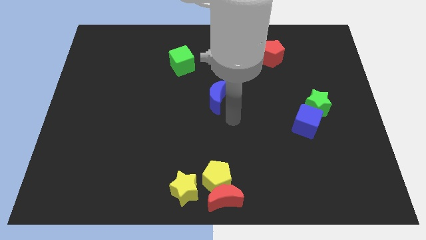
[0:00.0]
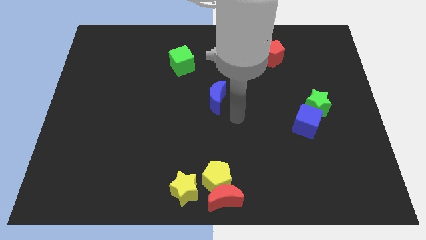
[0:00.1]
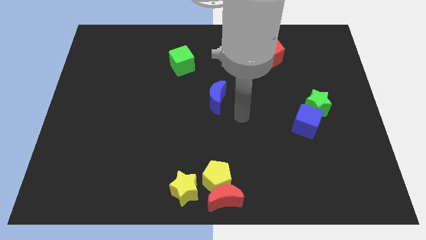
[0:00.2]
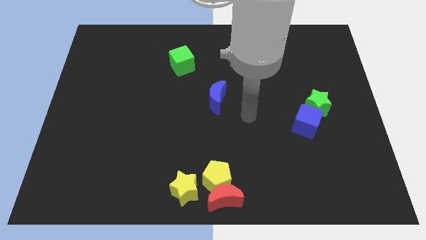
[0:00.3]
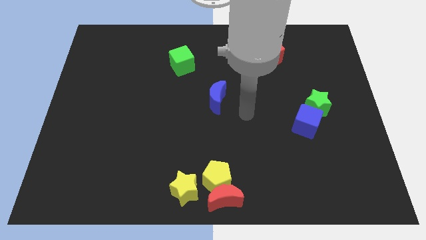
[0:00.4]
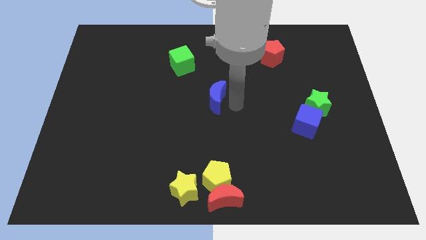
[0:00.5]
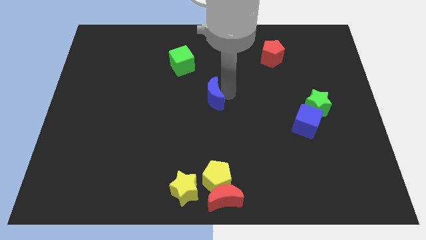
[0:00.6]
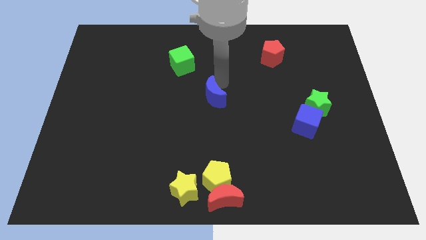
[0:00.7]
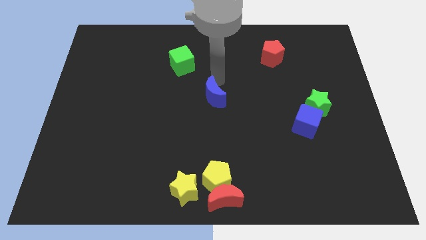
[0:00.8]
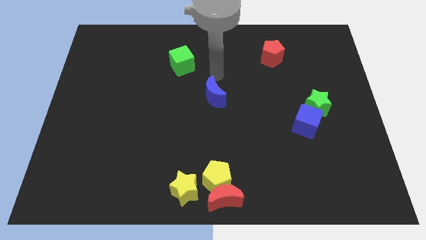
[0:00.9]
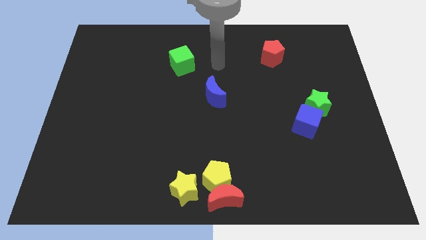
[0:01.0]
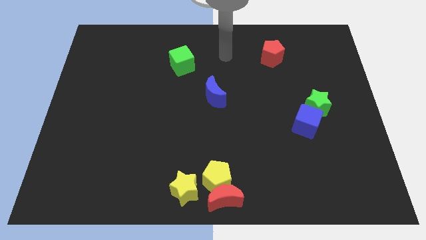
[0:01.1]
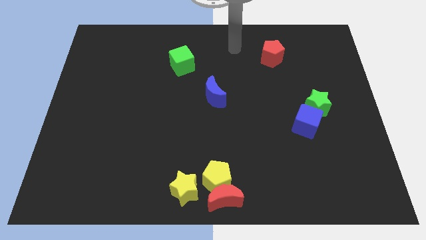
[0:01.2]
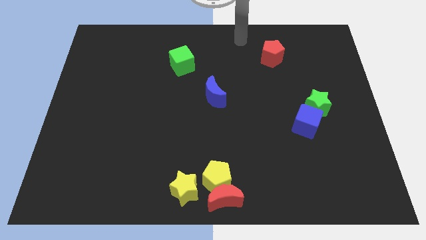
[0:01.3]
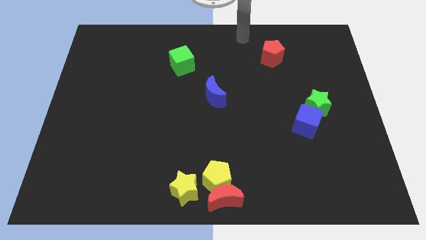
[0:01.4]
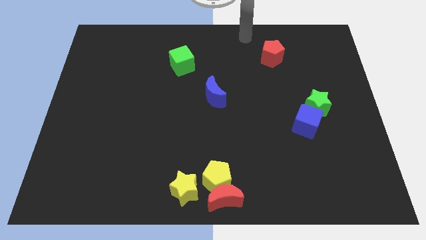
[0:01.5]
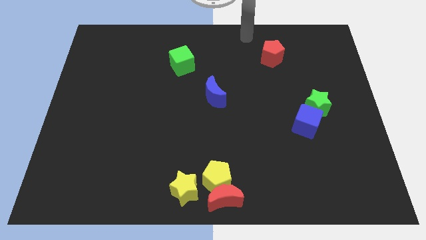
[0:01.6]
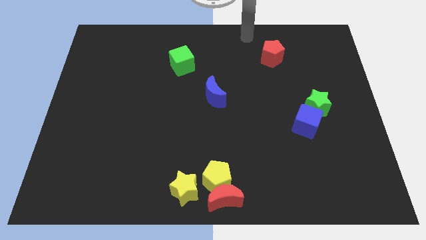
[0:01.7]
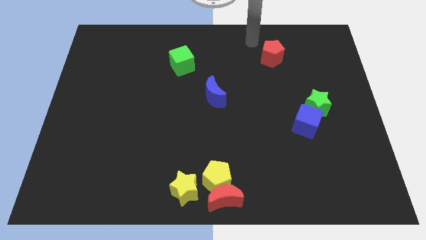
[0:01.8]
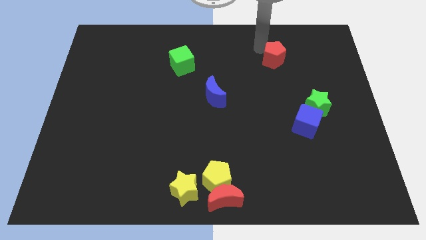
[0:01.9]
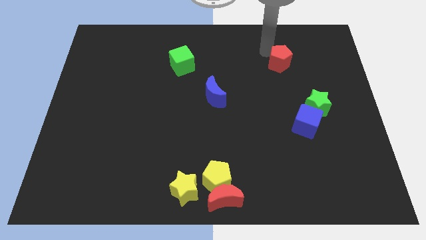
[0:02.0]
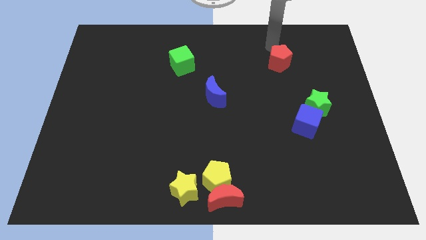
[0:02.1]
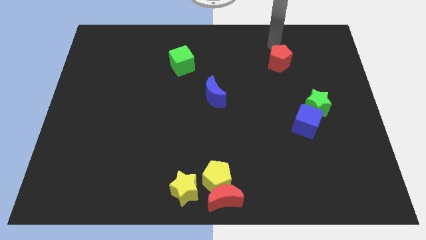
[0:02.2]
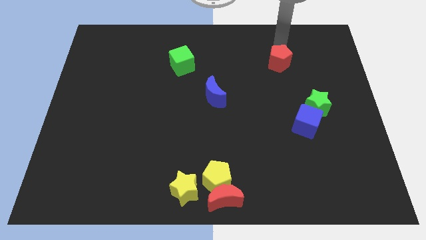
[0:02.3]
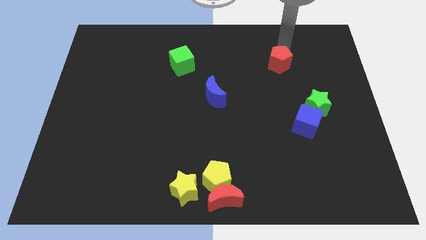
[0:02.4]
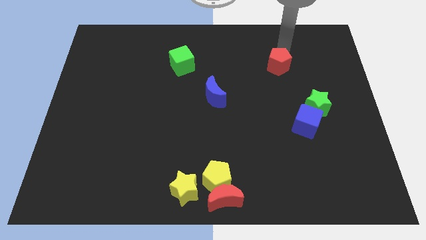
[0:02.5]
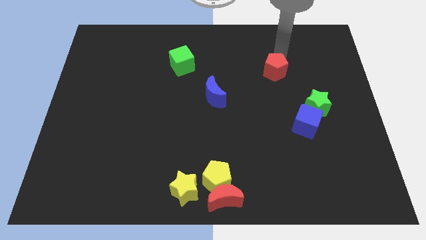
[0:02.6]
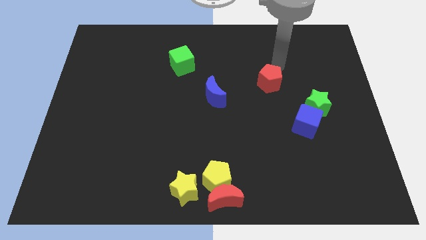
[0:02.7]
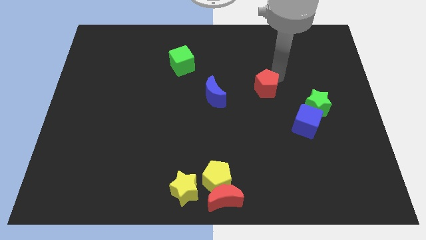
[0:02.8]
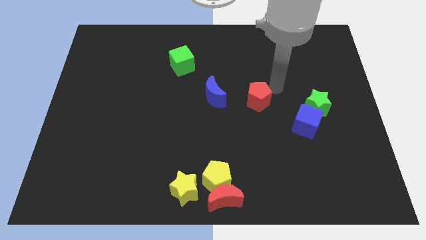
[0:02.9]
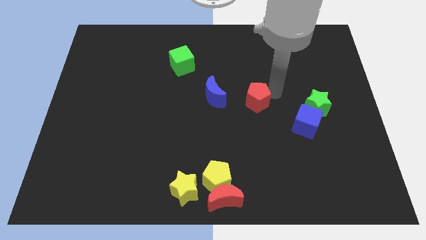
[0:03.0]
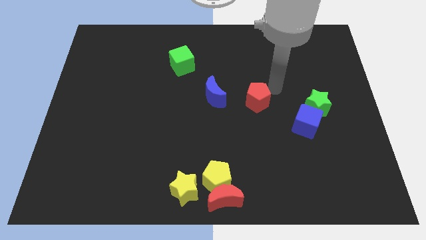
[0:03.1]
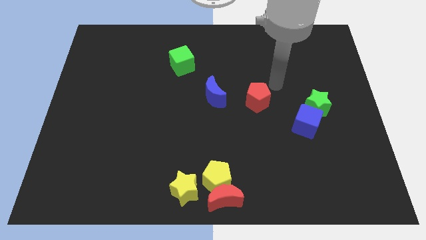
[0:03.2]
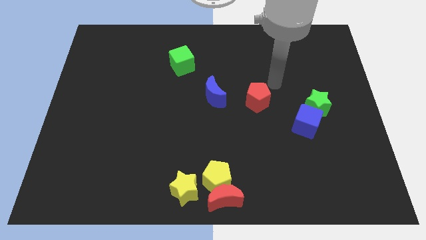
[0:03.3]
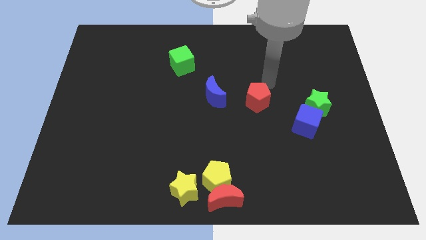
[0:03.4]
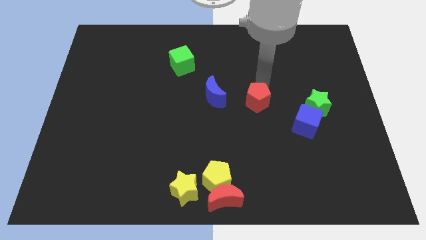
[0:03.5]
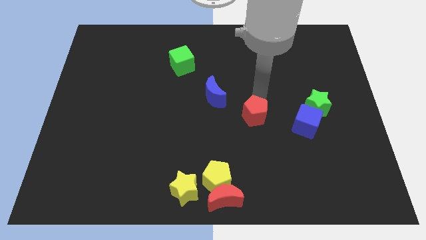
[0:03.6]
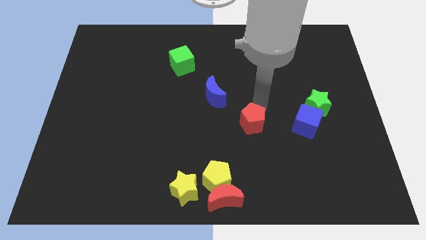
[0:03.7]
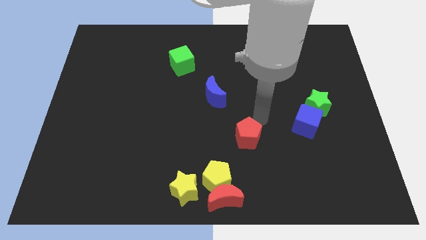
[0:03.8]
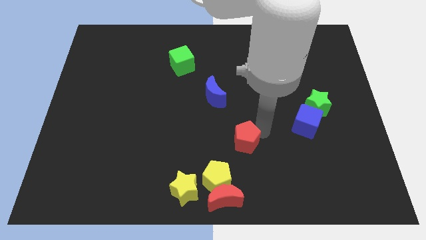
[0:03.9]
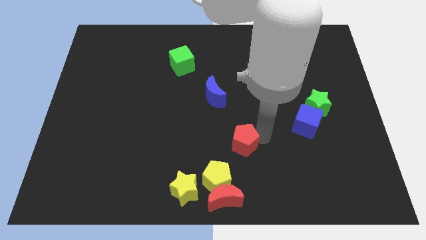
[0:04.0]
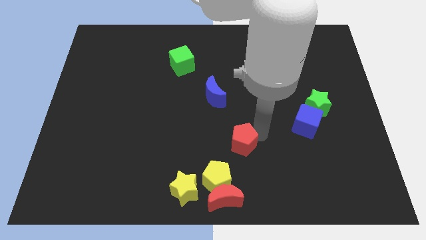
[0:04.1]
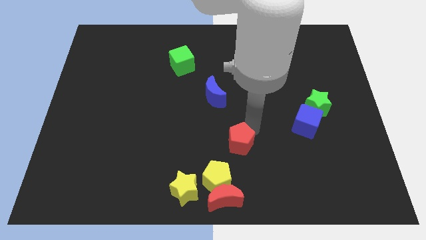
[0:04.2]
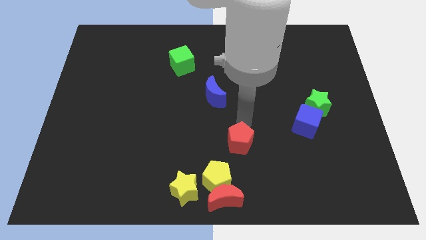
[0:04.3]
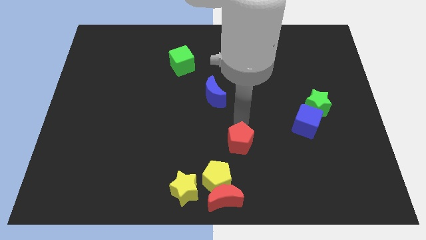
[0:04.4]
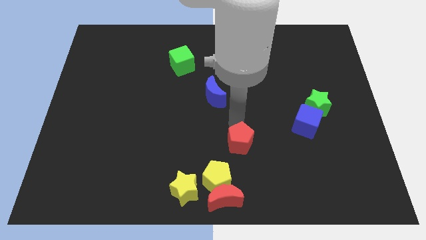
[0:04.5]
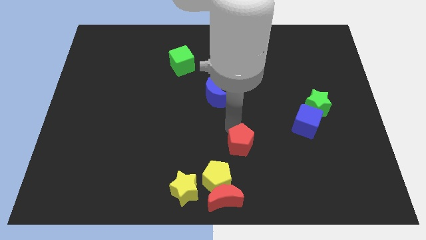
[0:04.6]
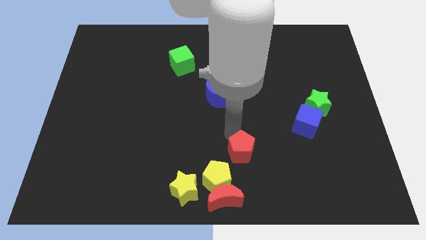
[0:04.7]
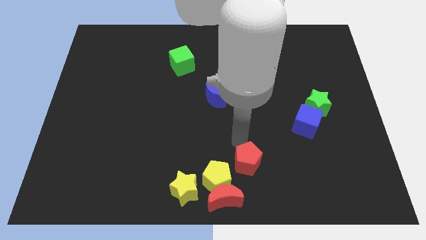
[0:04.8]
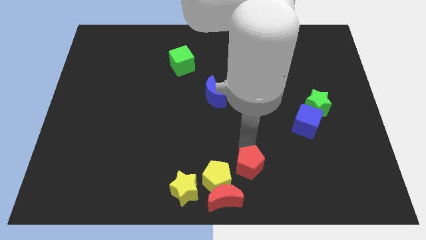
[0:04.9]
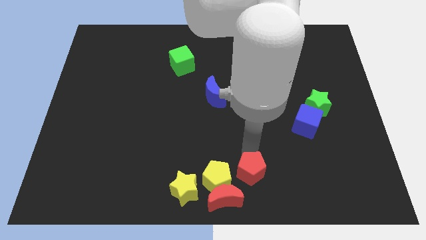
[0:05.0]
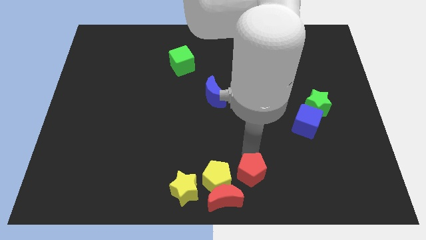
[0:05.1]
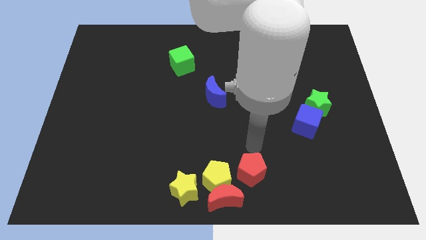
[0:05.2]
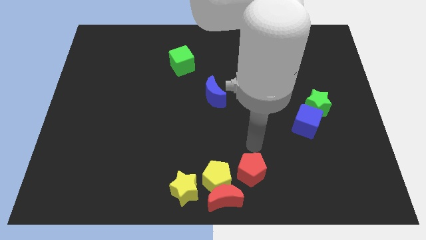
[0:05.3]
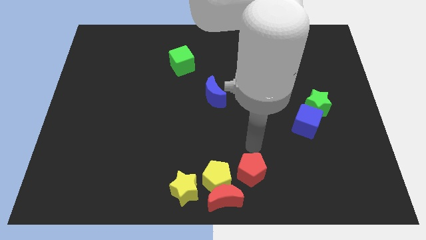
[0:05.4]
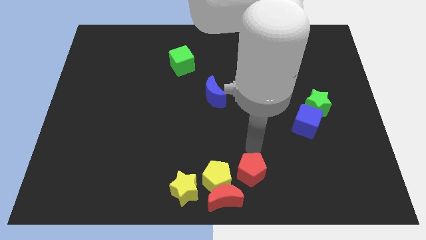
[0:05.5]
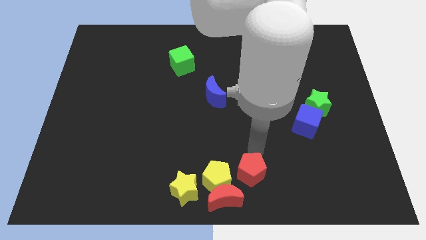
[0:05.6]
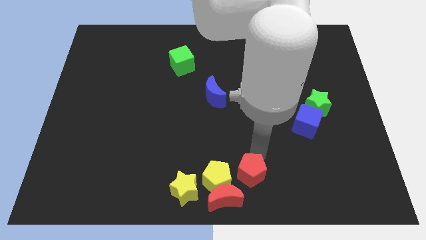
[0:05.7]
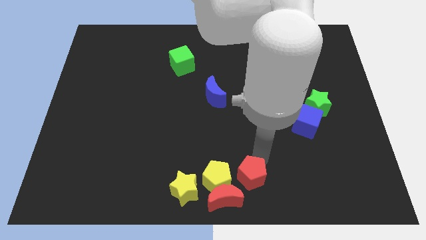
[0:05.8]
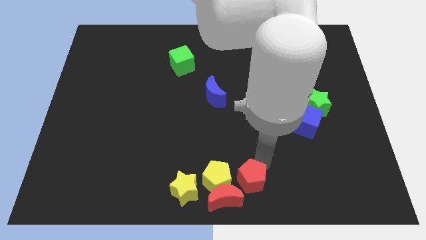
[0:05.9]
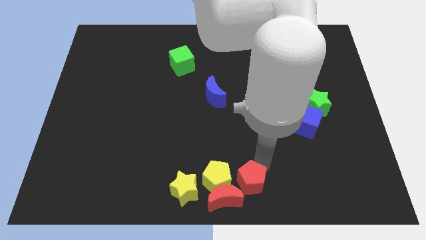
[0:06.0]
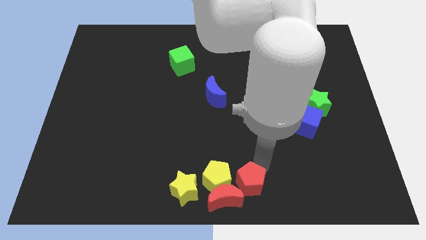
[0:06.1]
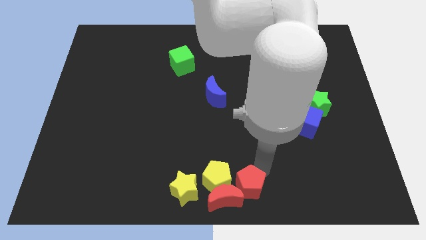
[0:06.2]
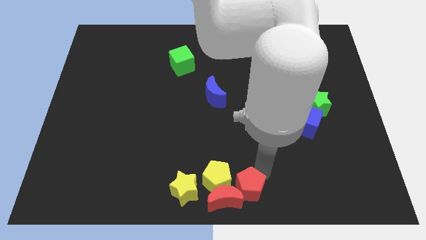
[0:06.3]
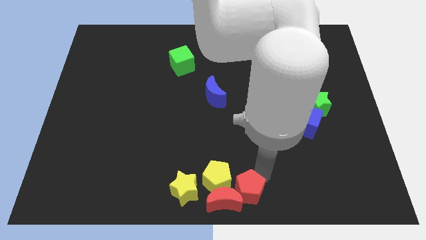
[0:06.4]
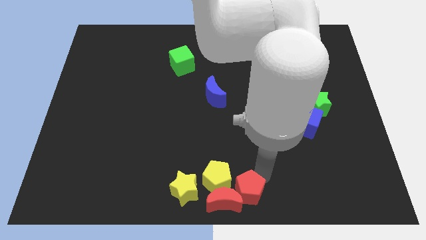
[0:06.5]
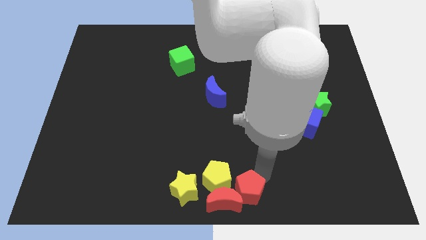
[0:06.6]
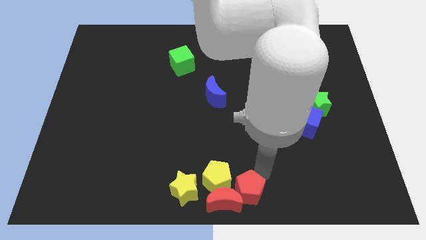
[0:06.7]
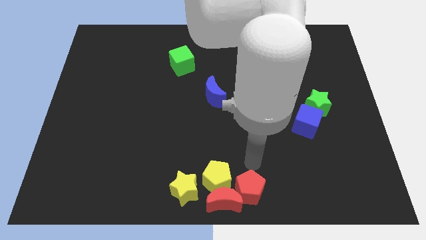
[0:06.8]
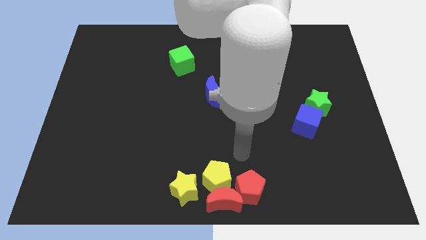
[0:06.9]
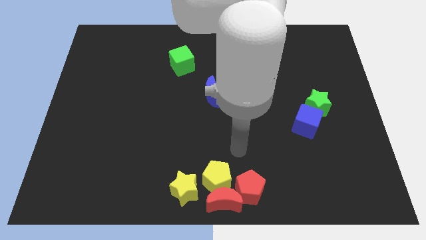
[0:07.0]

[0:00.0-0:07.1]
push the red pentagon into the red crescent on the bottom center

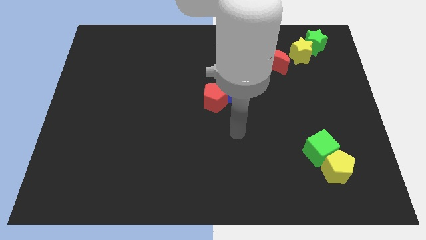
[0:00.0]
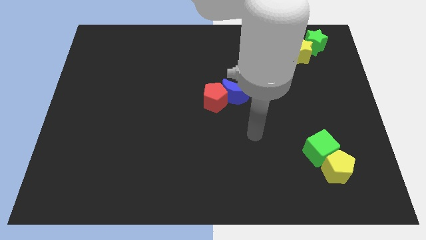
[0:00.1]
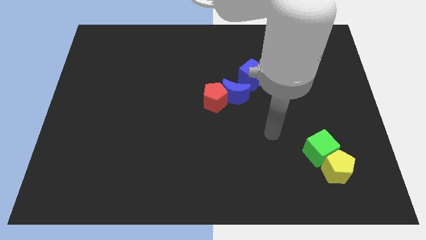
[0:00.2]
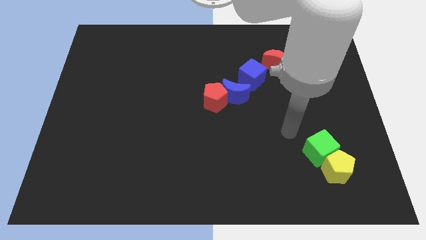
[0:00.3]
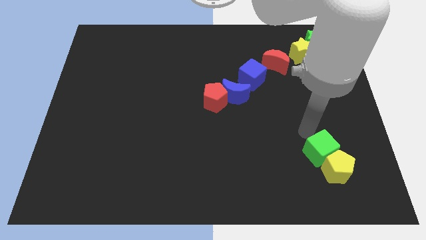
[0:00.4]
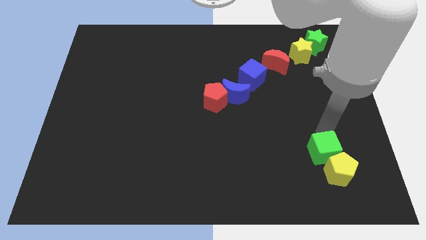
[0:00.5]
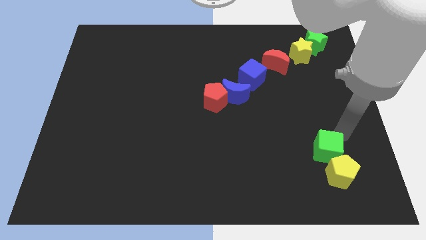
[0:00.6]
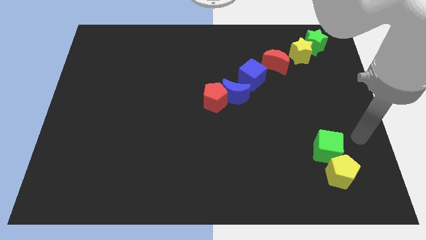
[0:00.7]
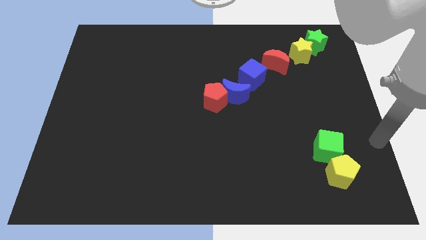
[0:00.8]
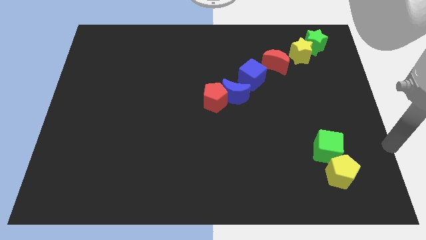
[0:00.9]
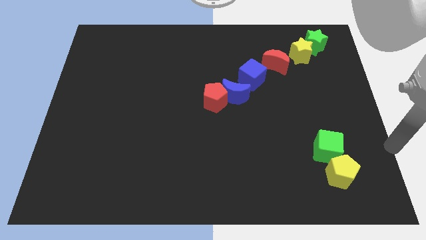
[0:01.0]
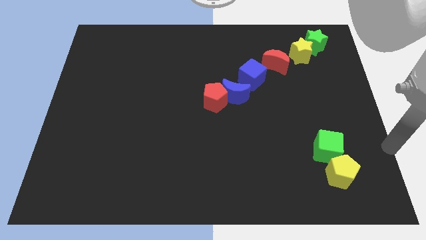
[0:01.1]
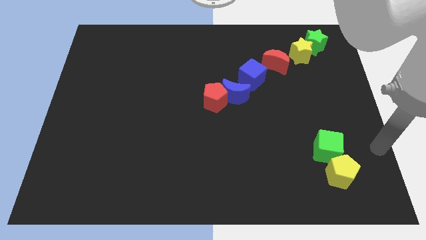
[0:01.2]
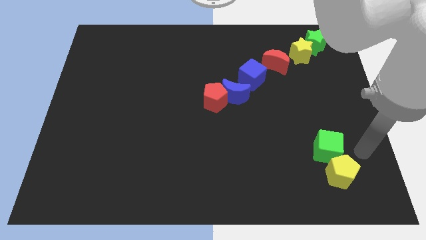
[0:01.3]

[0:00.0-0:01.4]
slide your hand to the bottom right

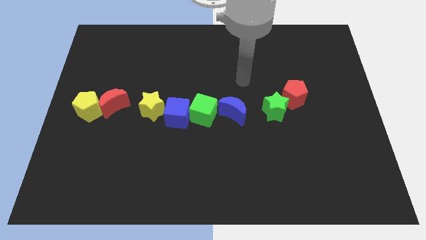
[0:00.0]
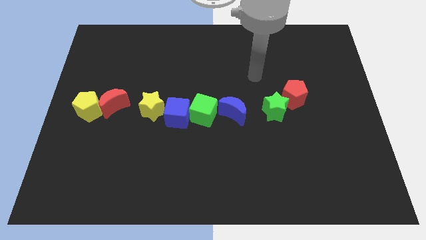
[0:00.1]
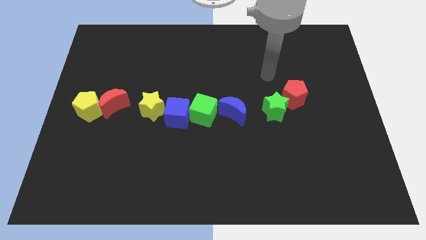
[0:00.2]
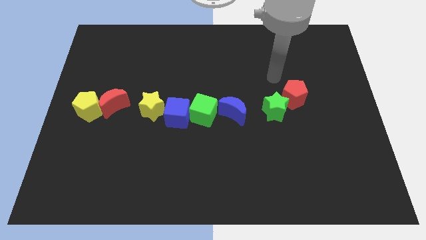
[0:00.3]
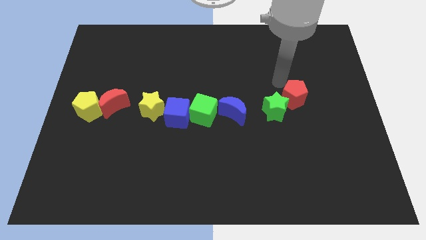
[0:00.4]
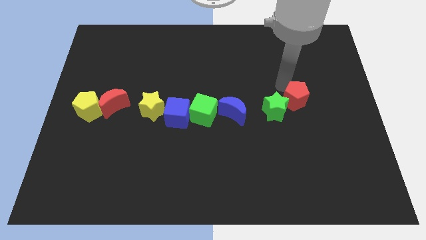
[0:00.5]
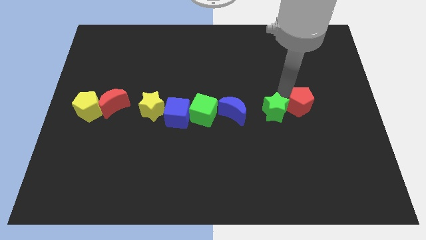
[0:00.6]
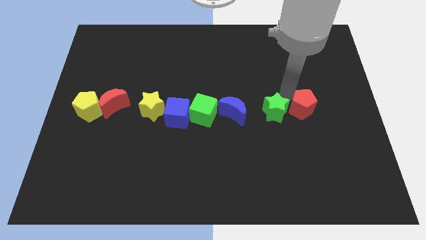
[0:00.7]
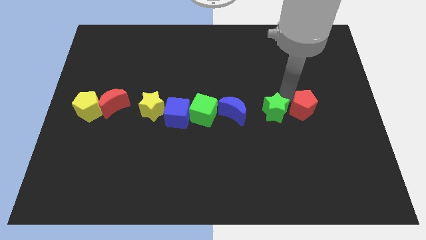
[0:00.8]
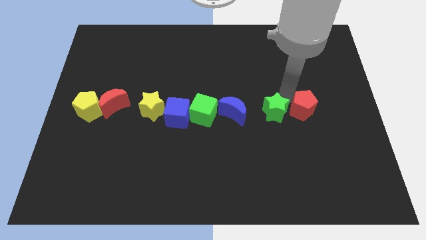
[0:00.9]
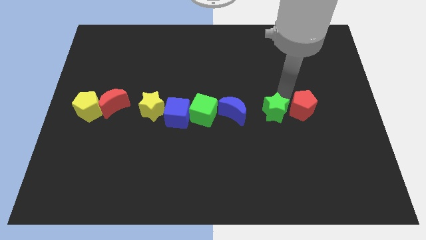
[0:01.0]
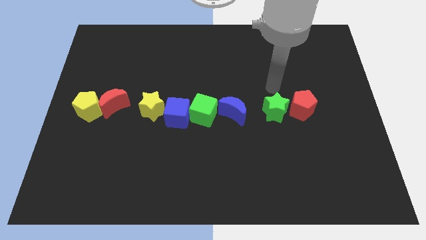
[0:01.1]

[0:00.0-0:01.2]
push the red pentagon right to the green star
